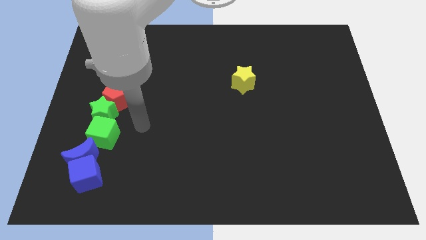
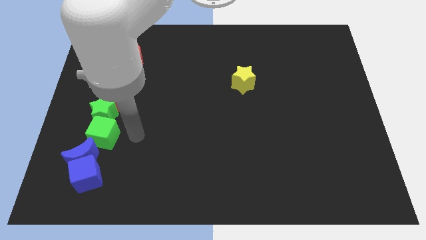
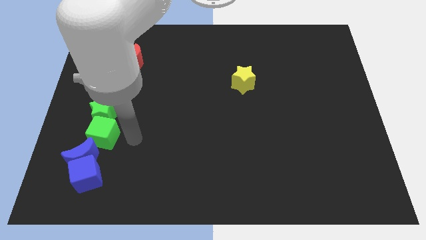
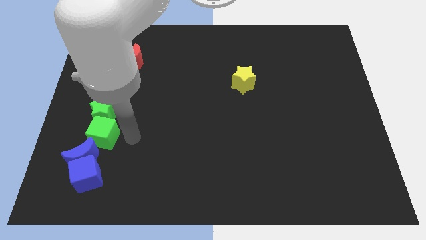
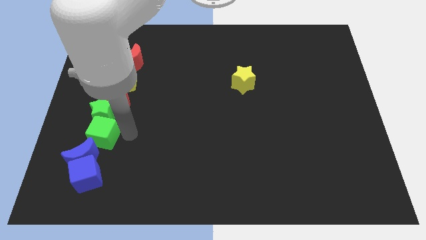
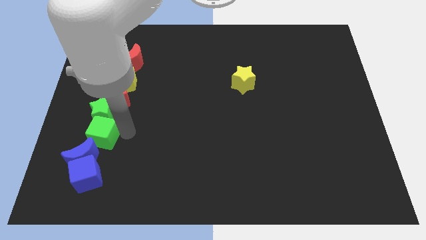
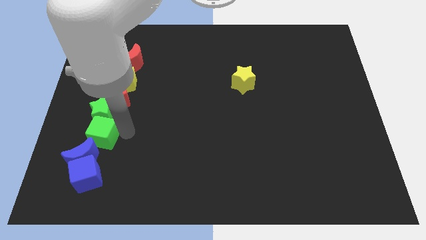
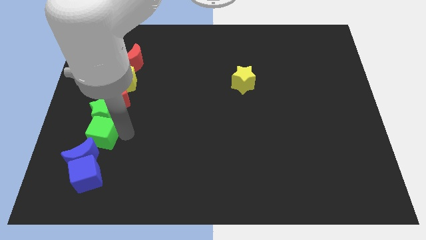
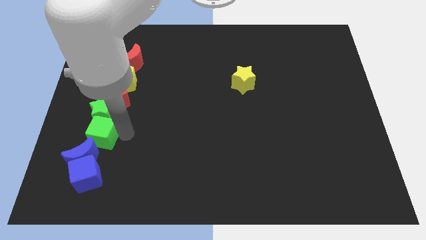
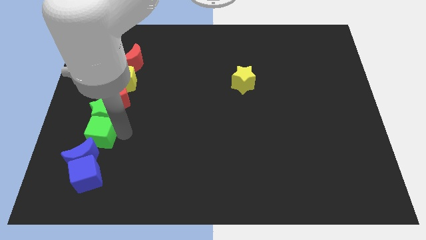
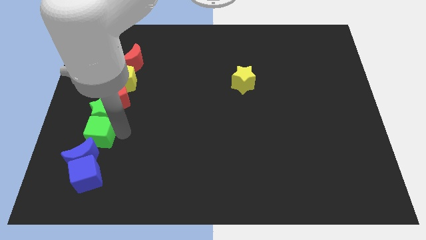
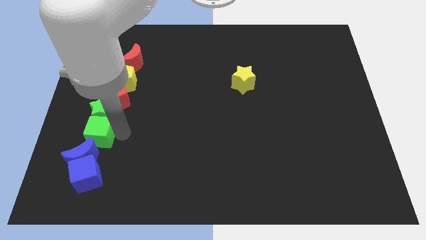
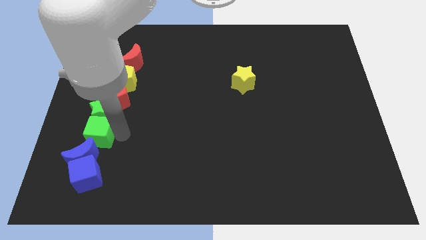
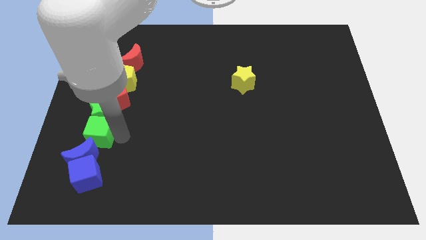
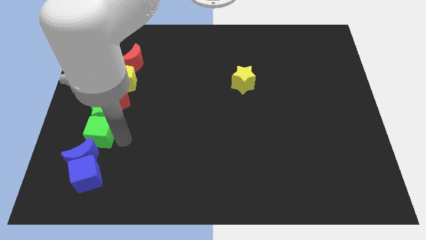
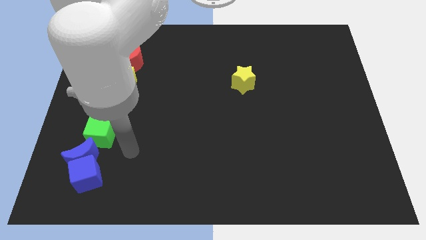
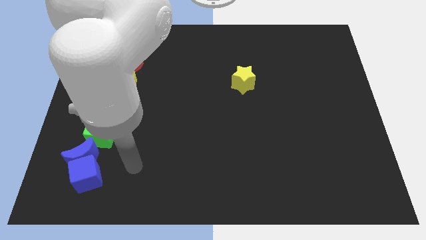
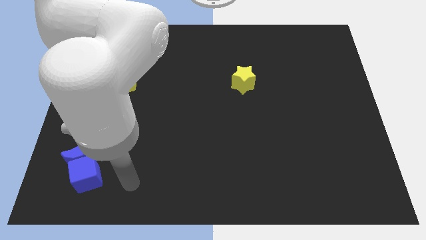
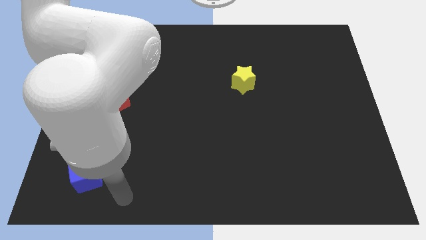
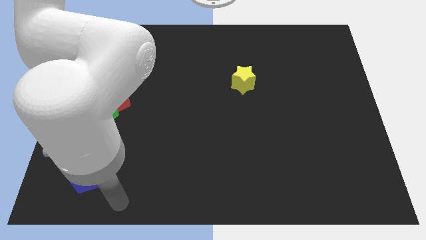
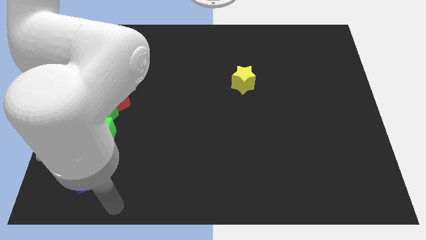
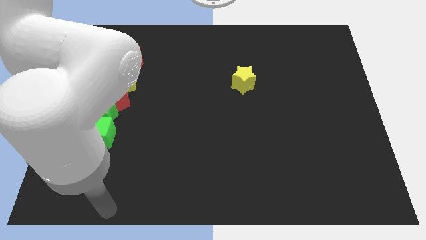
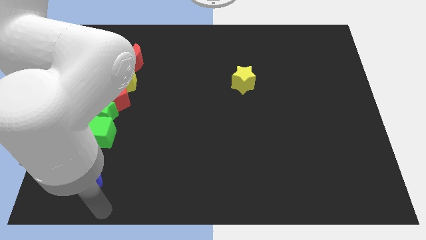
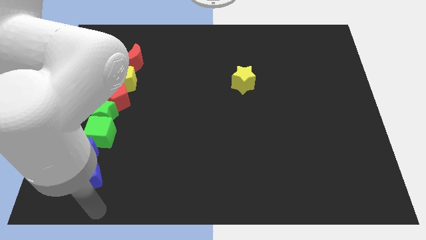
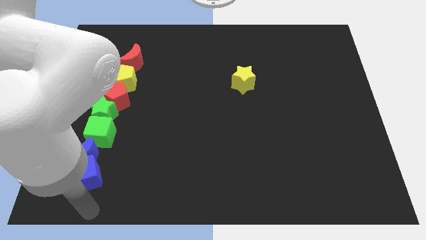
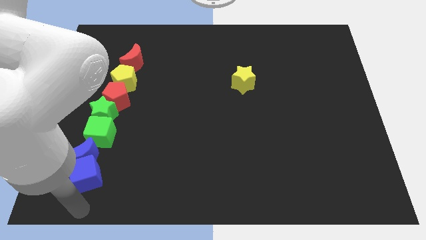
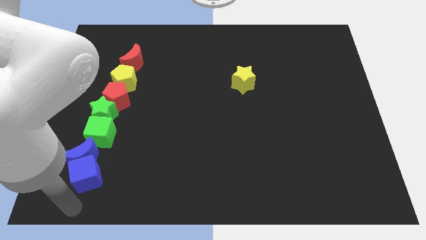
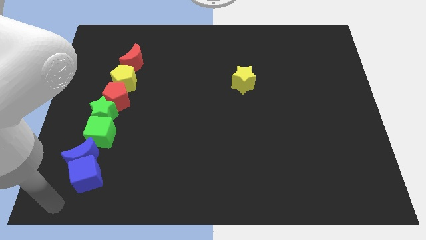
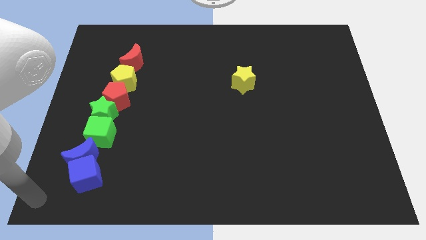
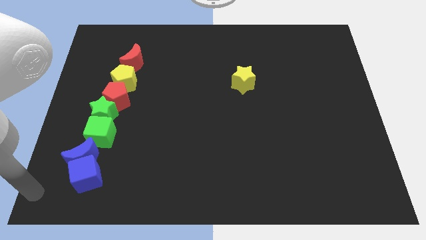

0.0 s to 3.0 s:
slightly push the green cube into the vertical line

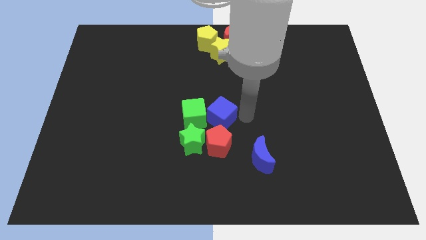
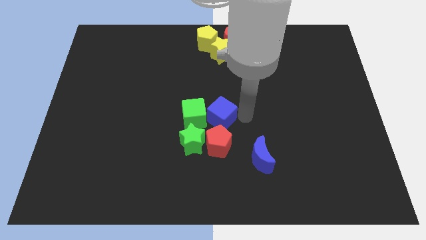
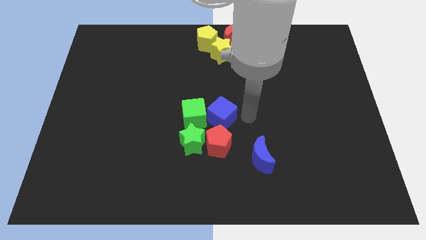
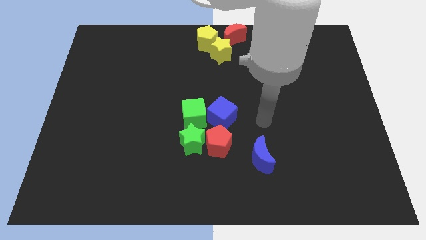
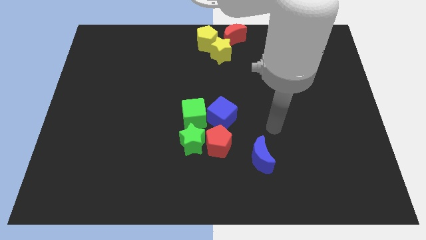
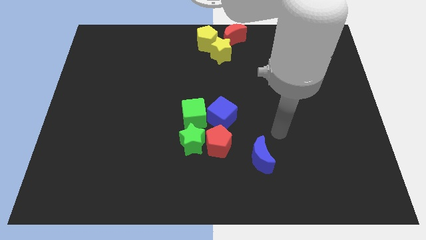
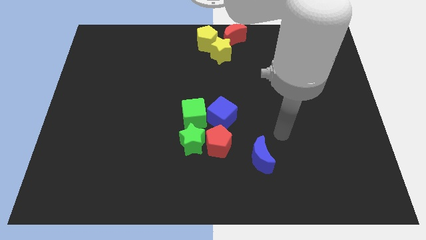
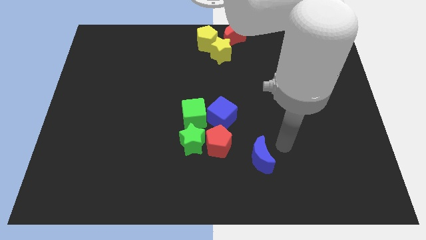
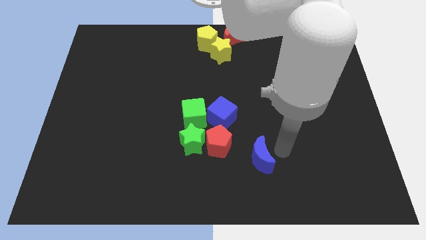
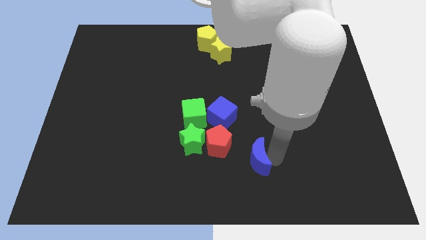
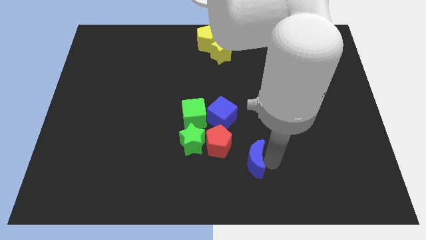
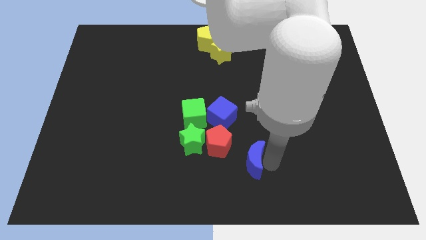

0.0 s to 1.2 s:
place the blue moon diagonally to blue cube

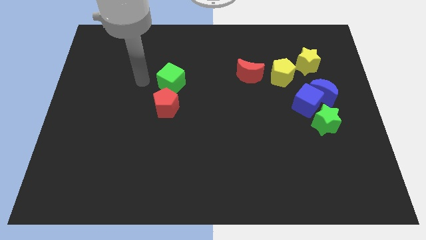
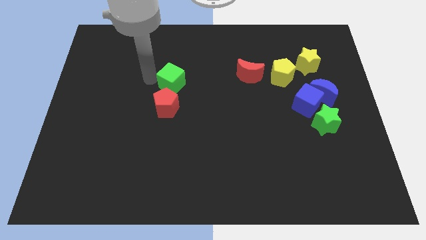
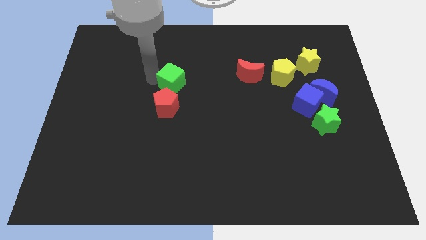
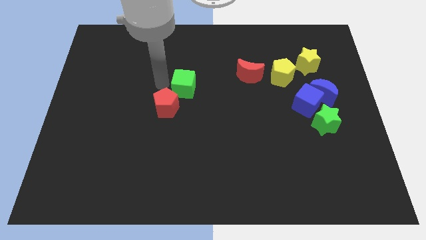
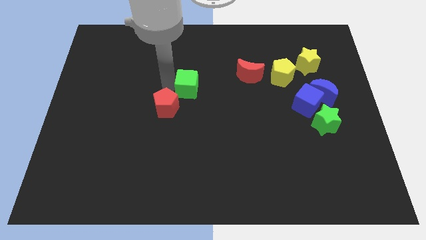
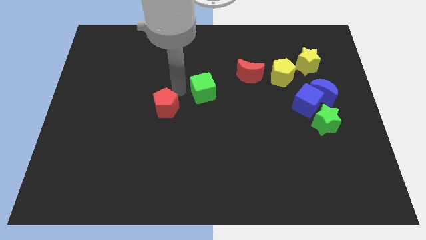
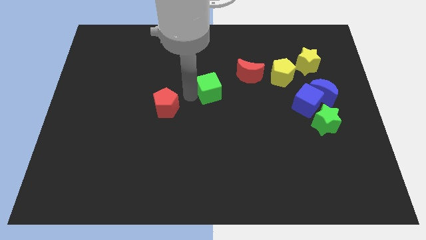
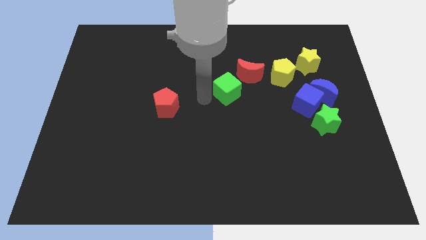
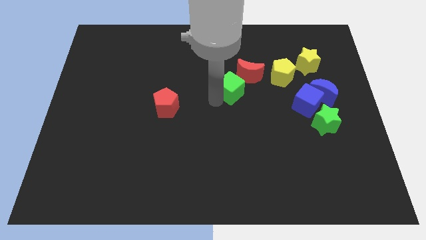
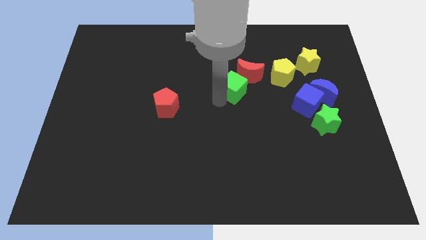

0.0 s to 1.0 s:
separate green cube from red pentagon

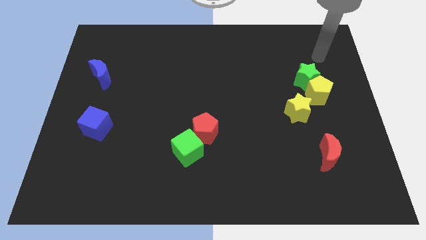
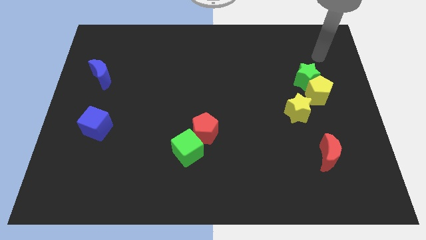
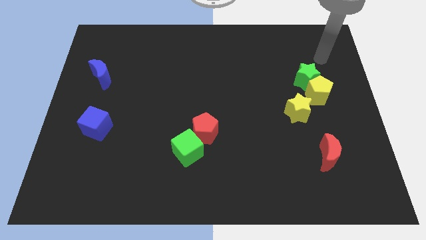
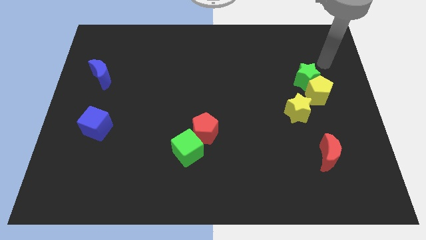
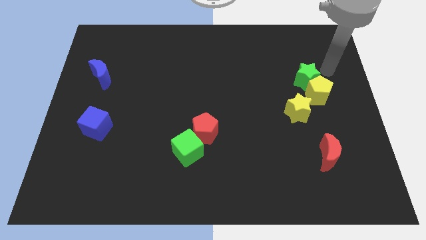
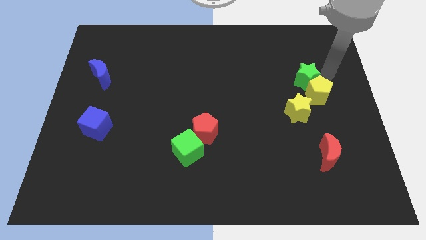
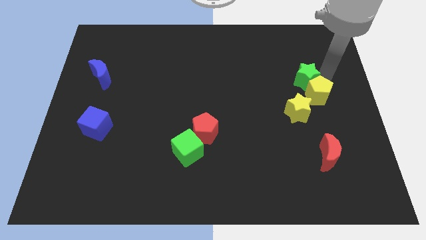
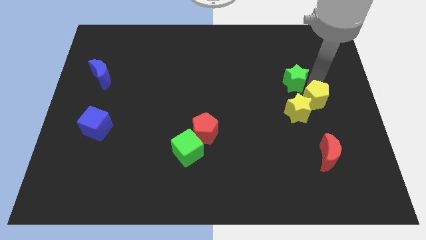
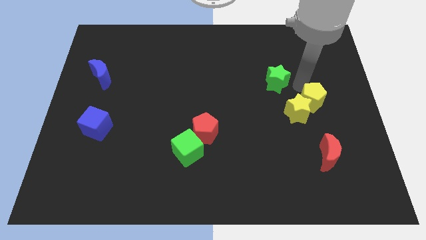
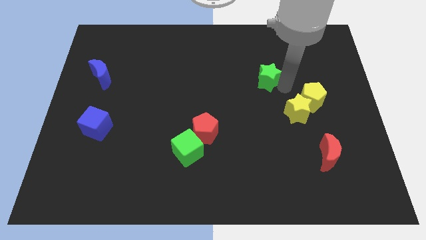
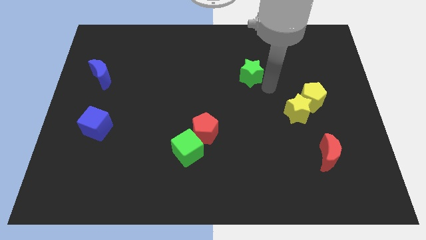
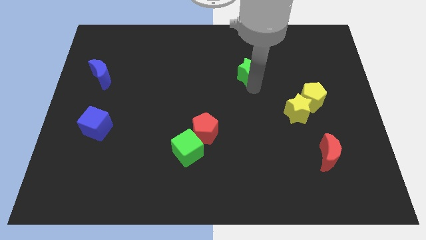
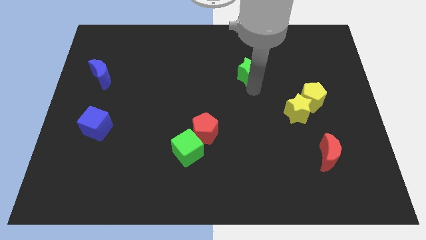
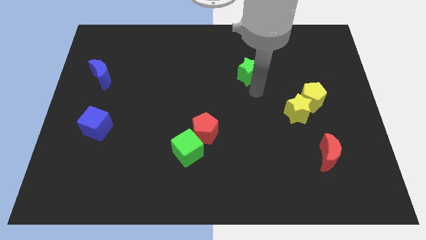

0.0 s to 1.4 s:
separate the green star from yellow pentagon

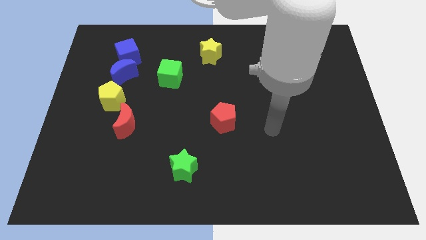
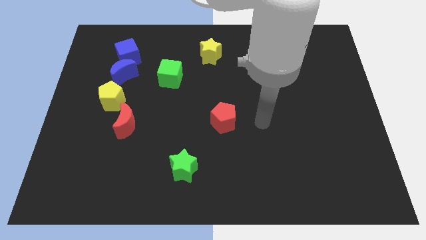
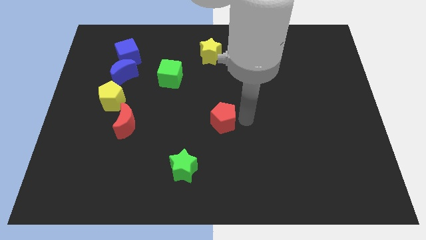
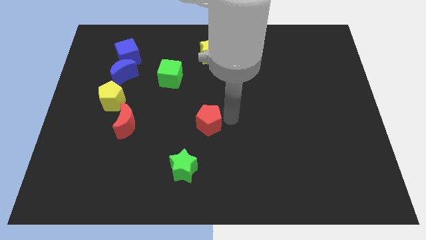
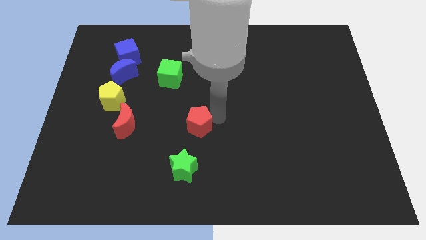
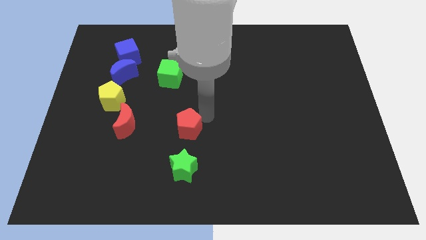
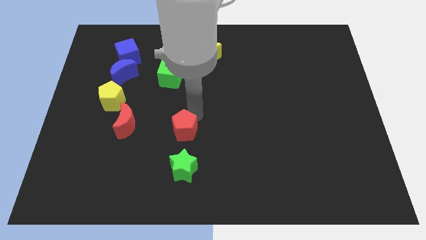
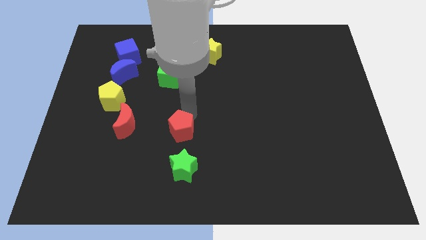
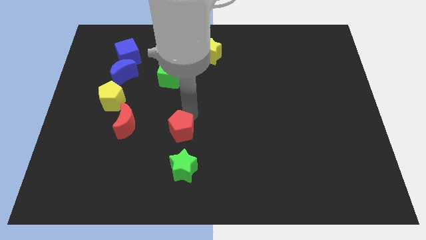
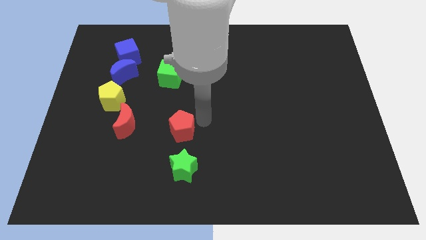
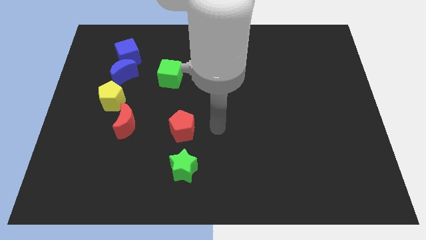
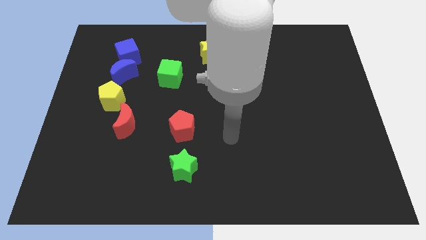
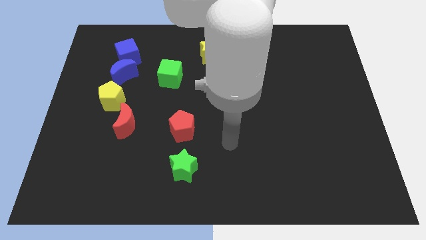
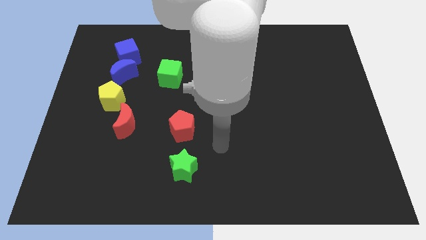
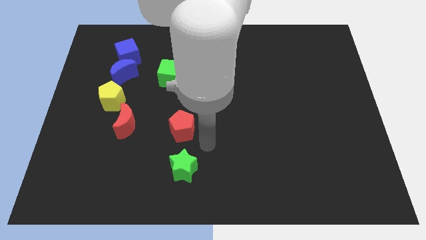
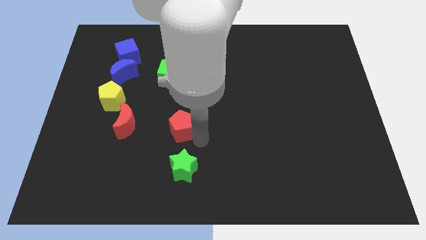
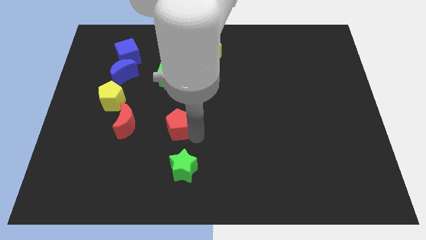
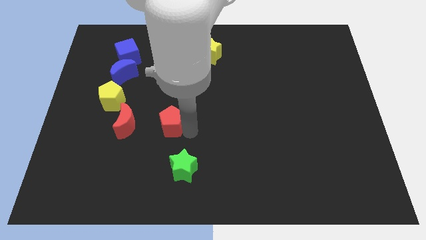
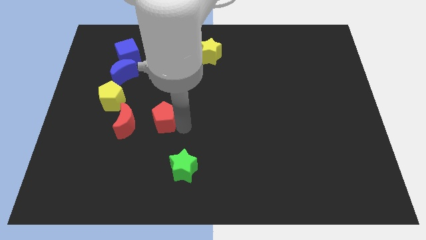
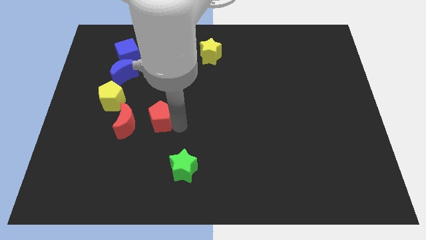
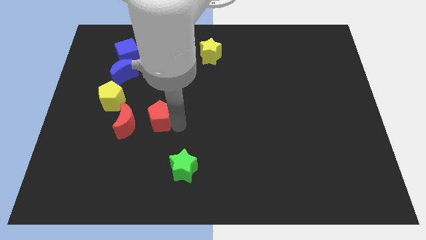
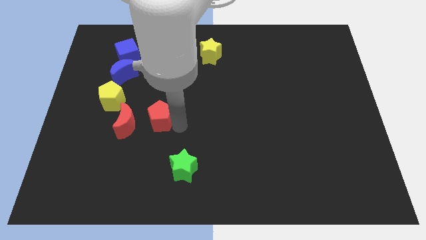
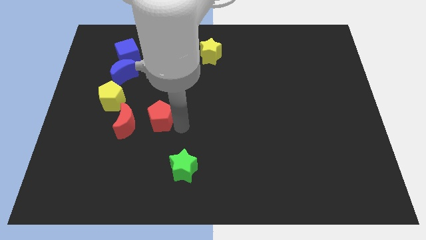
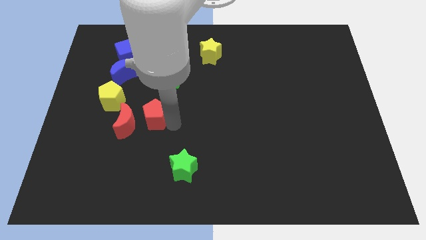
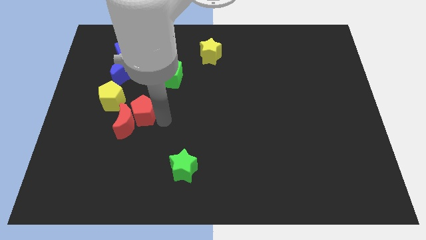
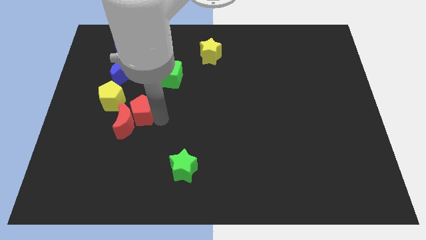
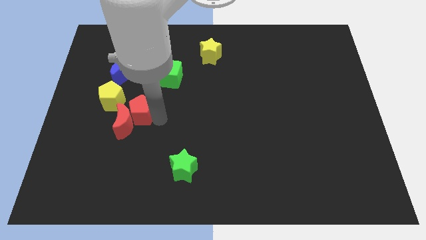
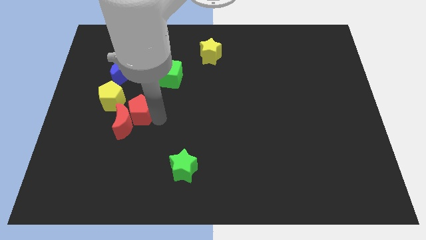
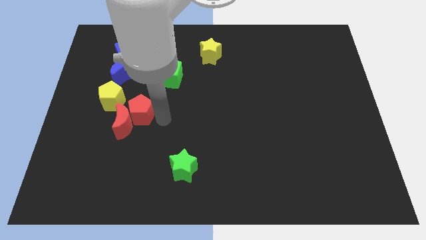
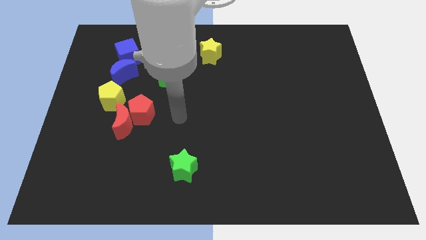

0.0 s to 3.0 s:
move the red pentagon into the top right of the red moon
